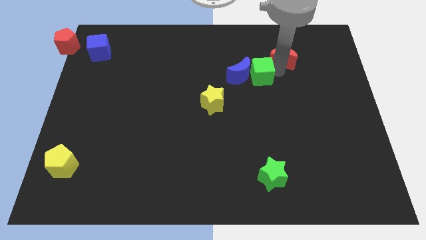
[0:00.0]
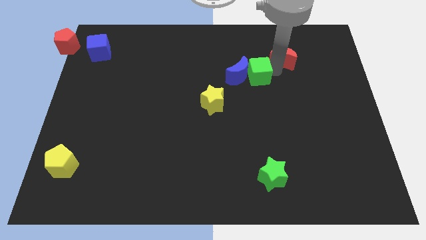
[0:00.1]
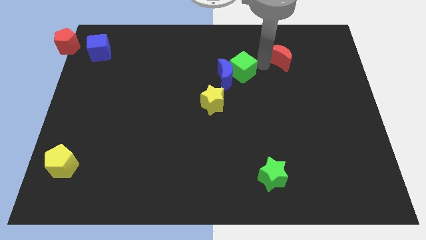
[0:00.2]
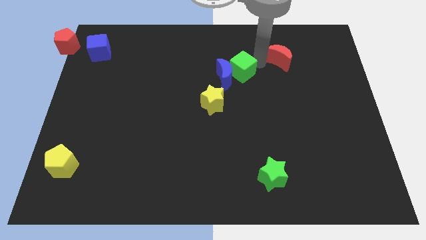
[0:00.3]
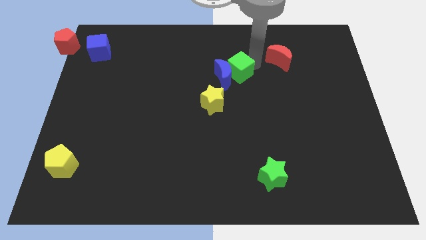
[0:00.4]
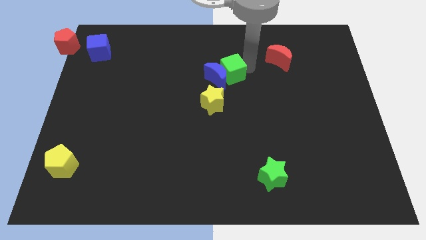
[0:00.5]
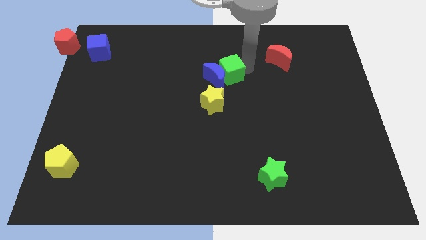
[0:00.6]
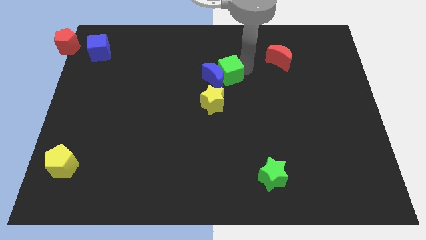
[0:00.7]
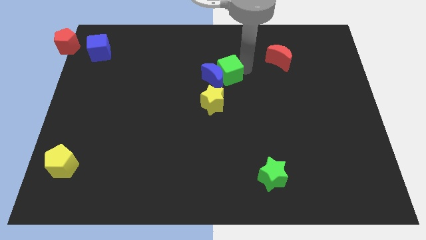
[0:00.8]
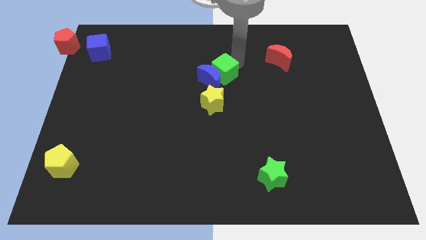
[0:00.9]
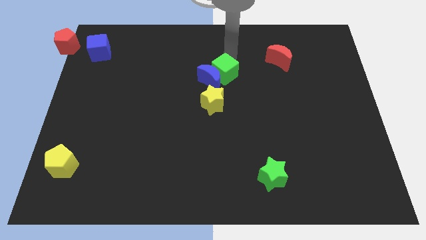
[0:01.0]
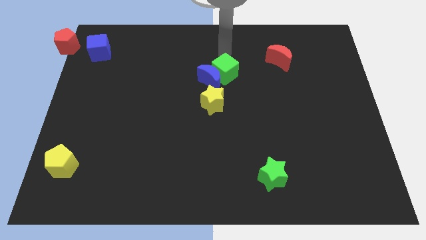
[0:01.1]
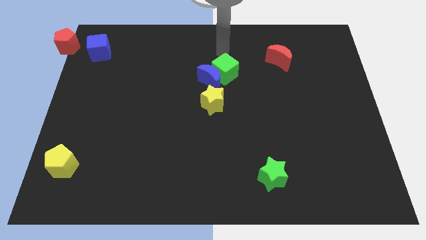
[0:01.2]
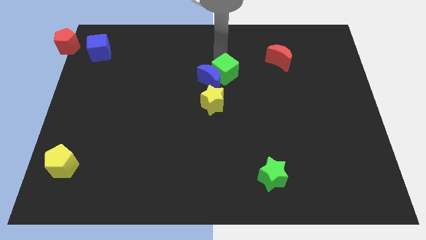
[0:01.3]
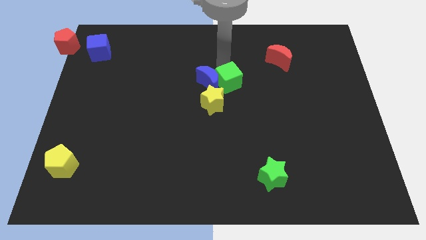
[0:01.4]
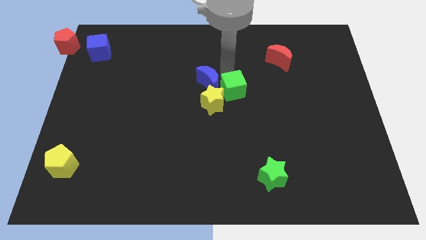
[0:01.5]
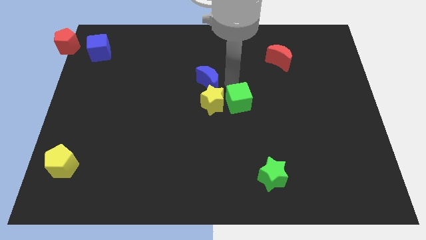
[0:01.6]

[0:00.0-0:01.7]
push green cube beside yellow star

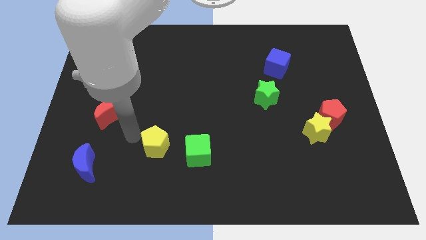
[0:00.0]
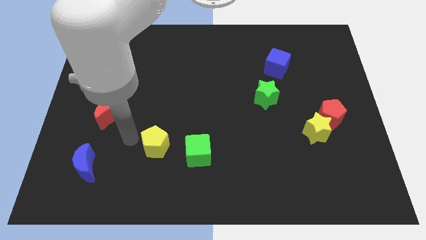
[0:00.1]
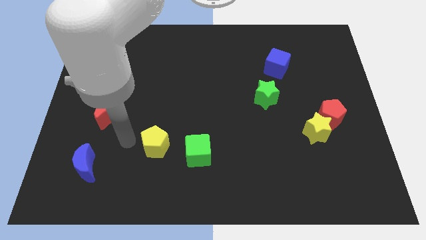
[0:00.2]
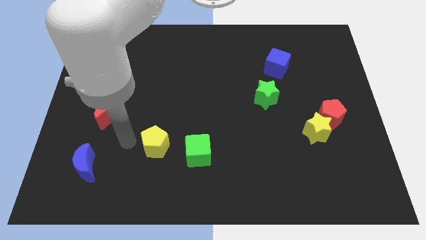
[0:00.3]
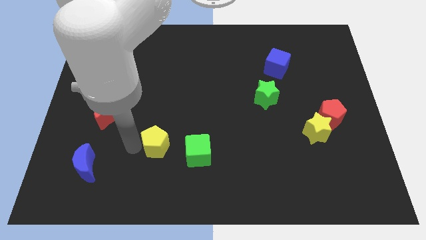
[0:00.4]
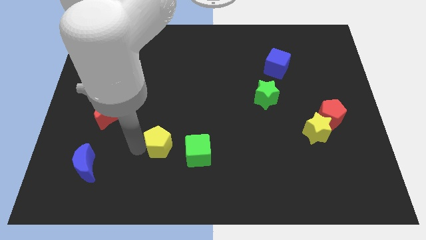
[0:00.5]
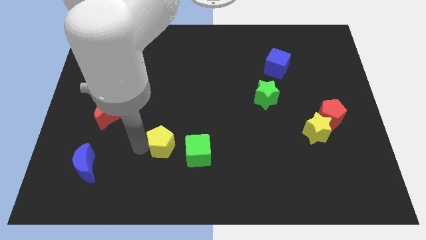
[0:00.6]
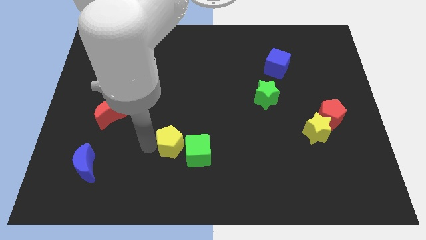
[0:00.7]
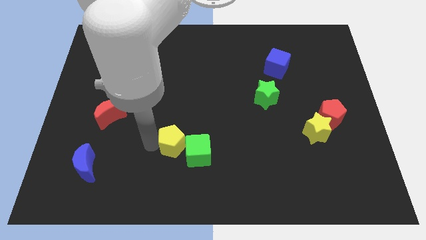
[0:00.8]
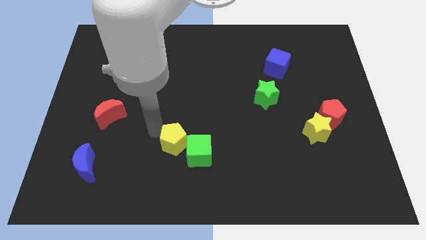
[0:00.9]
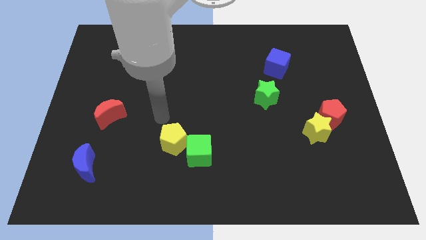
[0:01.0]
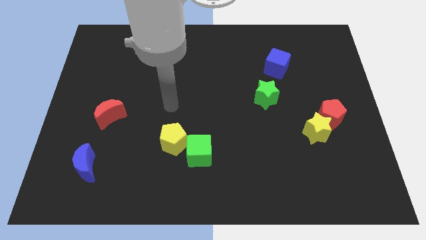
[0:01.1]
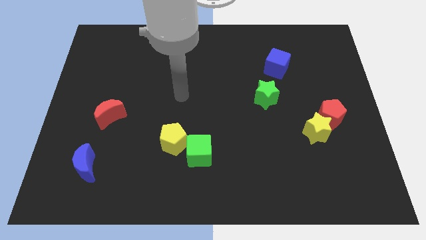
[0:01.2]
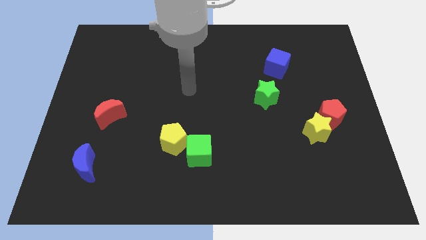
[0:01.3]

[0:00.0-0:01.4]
push the yellow pentagon into the green cube

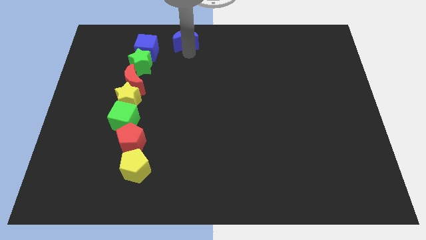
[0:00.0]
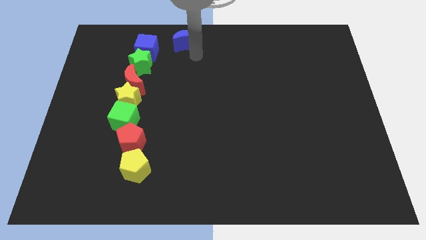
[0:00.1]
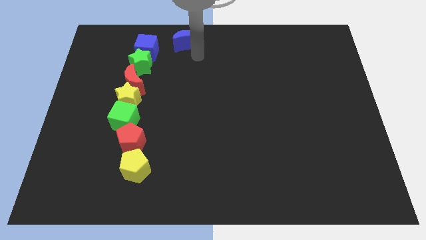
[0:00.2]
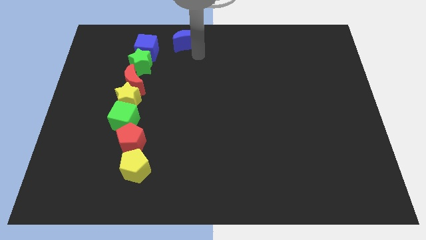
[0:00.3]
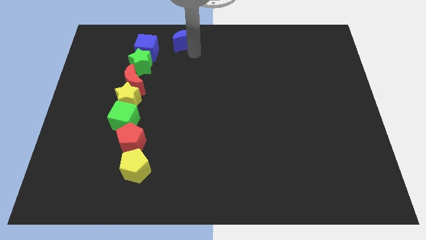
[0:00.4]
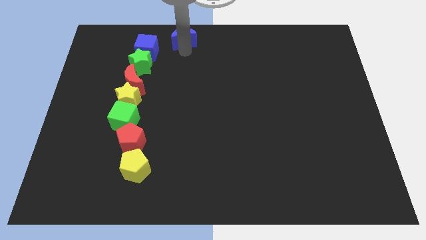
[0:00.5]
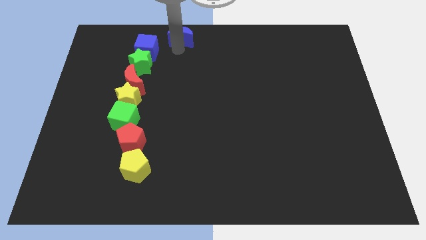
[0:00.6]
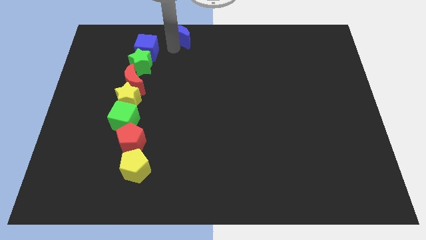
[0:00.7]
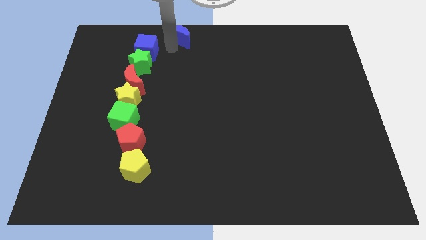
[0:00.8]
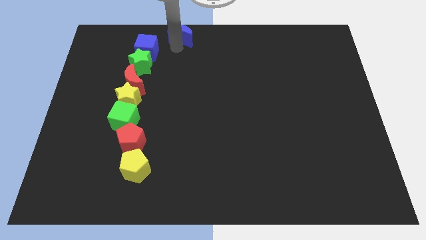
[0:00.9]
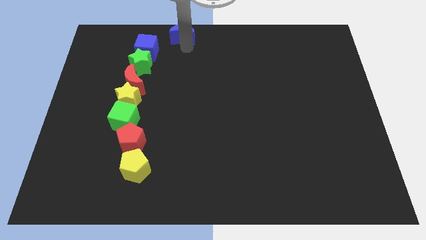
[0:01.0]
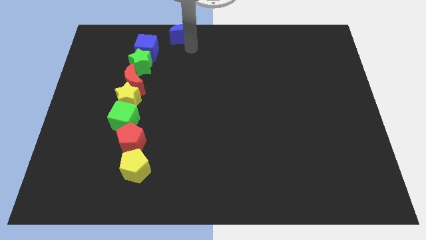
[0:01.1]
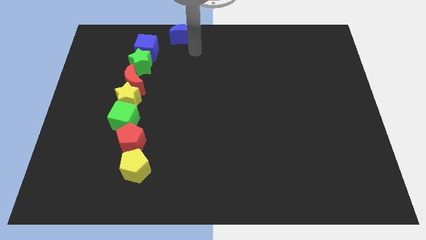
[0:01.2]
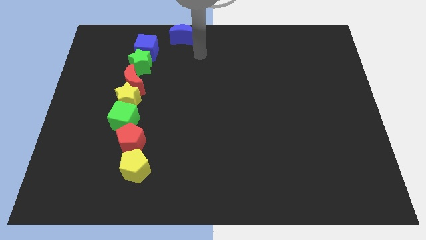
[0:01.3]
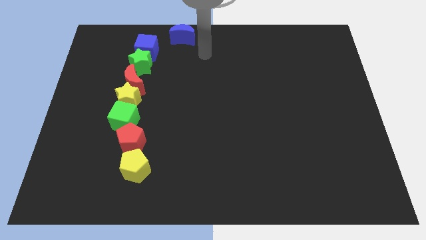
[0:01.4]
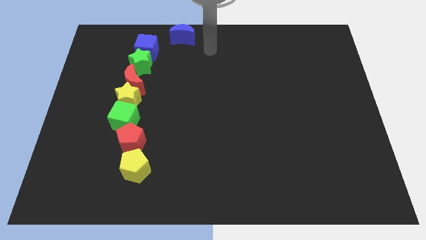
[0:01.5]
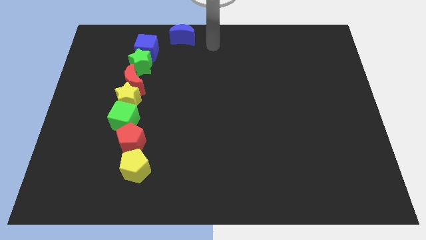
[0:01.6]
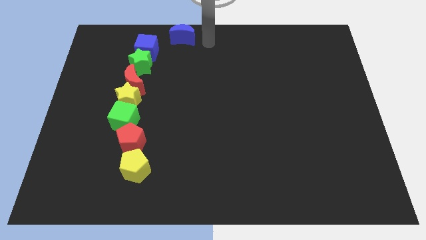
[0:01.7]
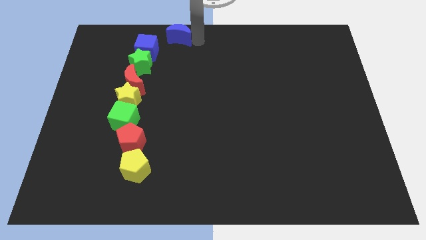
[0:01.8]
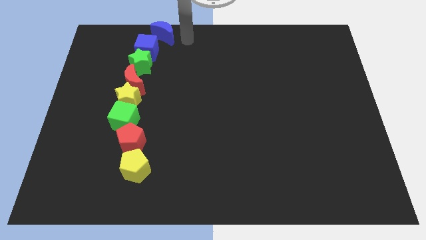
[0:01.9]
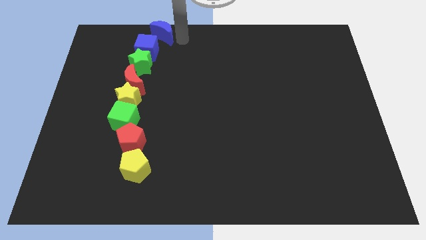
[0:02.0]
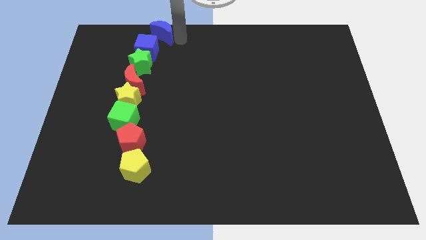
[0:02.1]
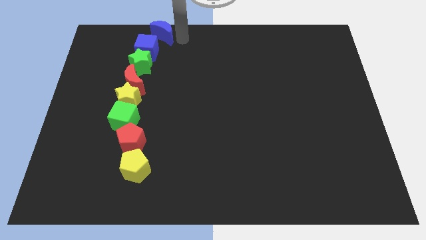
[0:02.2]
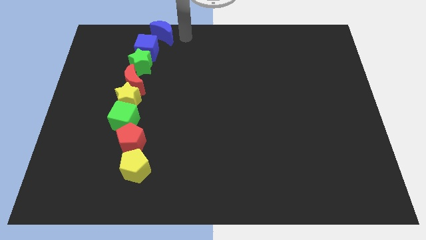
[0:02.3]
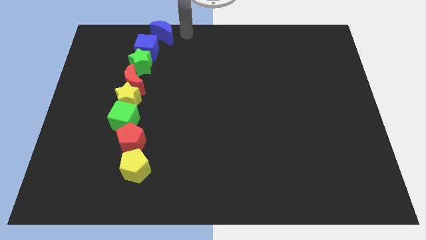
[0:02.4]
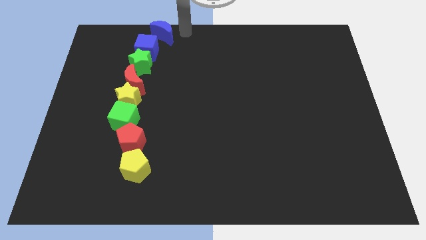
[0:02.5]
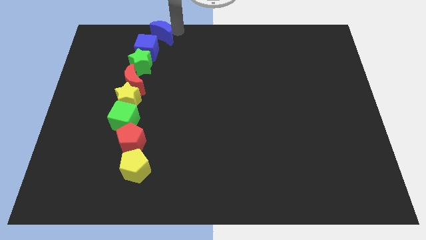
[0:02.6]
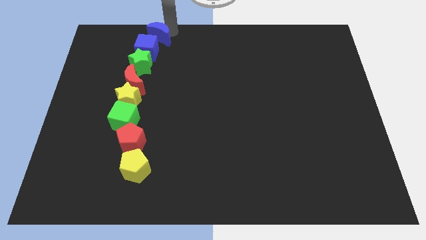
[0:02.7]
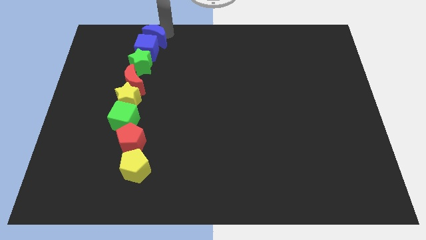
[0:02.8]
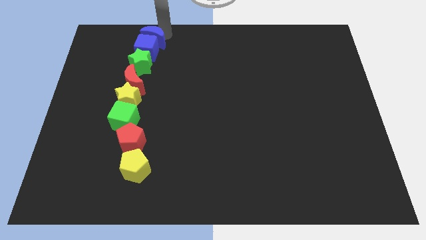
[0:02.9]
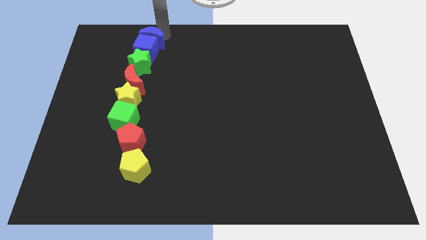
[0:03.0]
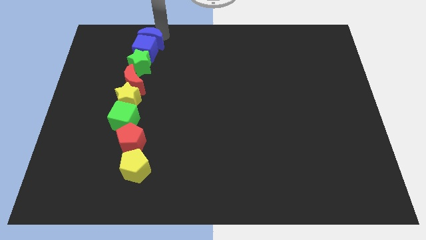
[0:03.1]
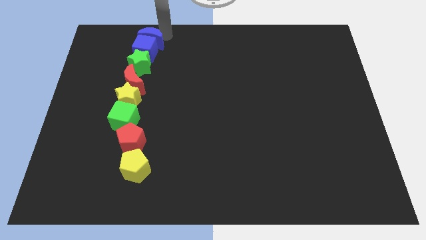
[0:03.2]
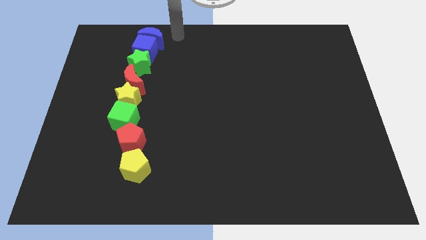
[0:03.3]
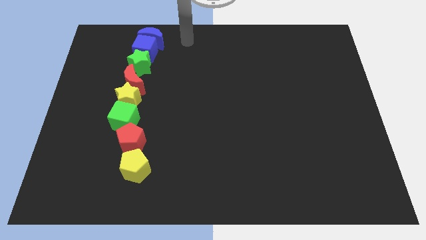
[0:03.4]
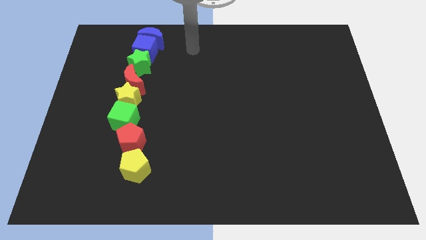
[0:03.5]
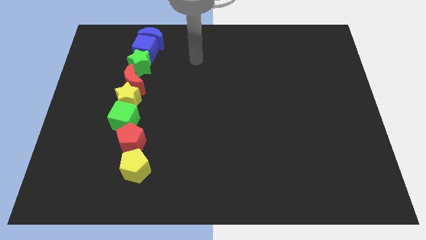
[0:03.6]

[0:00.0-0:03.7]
move the blue moon into the blue cube

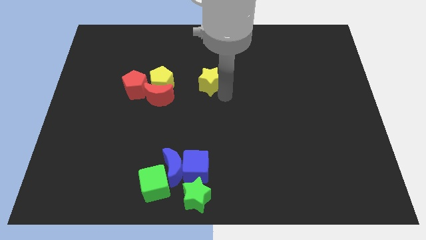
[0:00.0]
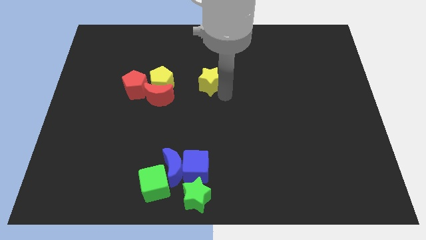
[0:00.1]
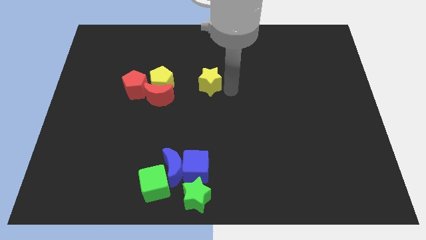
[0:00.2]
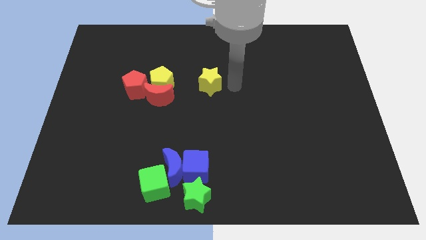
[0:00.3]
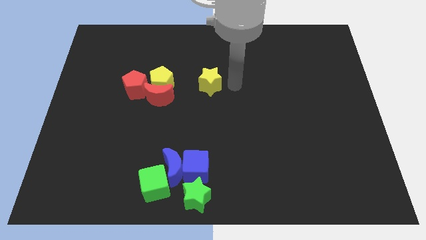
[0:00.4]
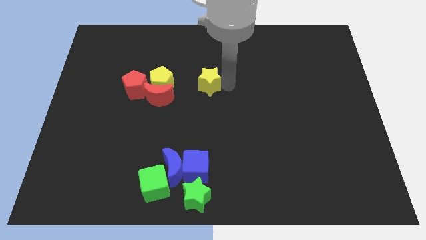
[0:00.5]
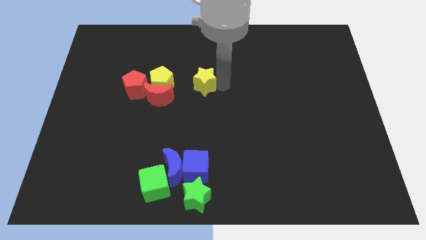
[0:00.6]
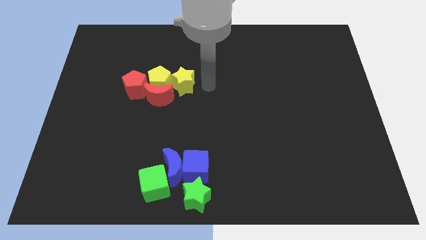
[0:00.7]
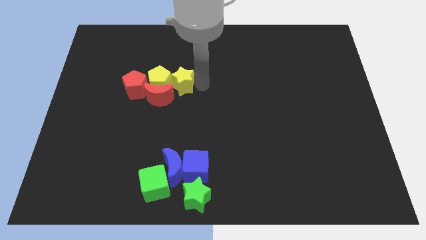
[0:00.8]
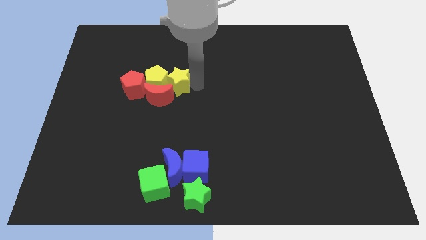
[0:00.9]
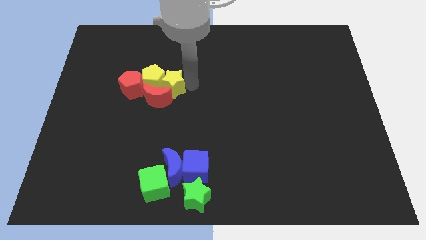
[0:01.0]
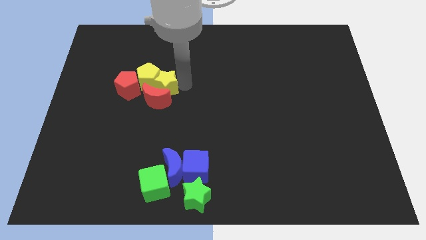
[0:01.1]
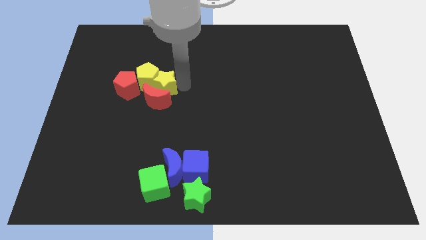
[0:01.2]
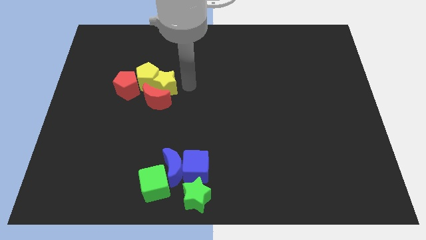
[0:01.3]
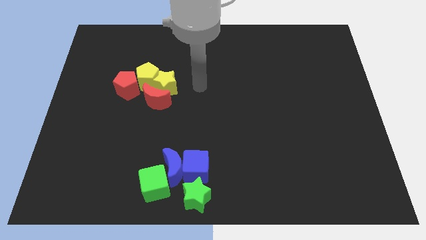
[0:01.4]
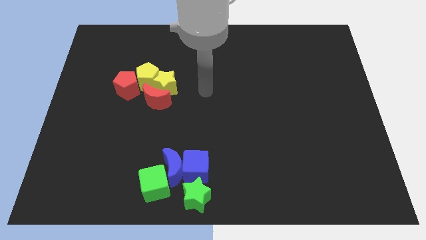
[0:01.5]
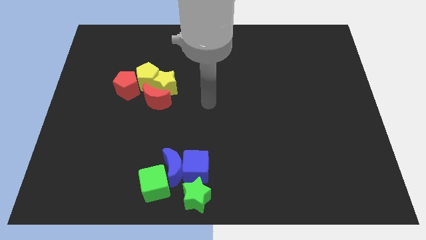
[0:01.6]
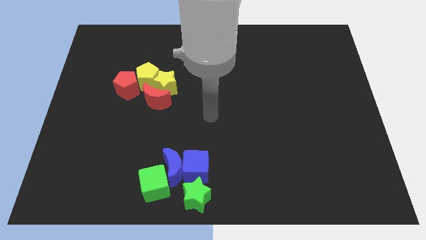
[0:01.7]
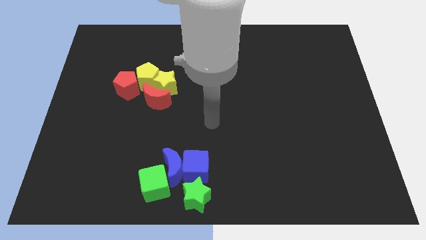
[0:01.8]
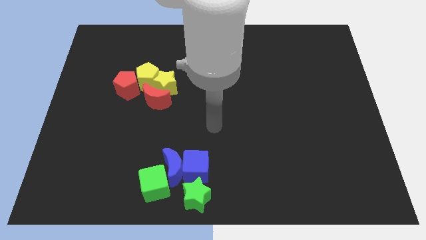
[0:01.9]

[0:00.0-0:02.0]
push the yellow star to the above the red crescent

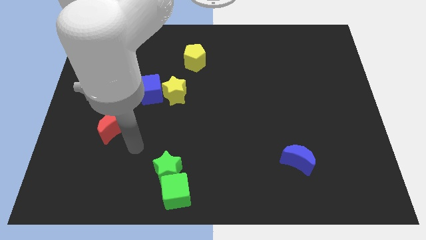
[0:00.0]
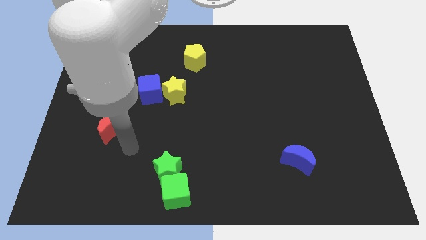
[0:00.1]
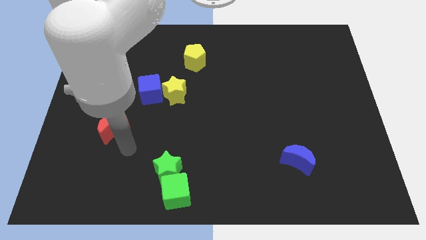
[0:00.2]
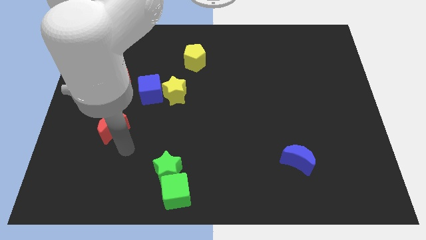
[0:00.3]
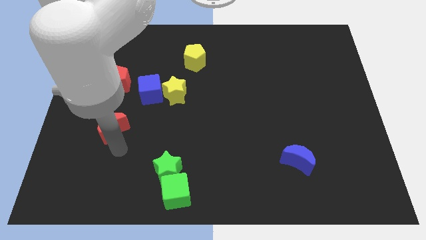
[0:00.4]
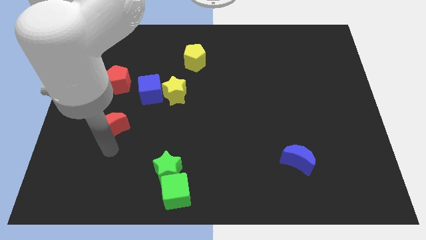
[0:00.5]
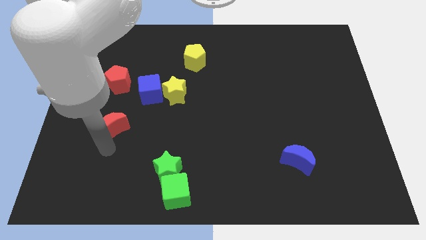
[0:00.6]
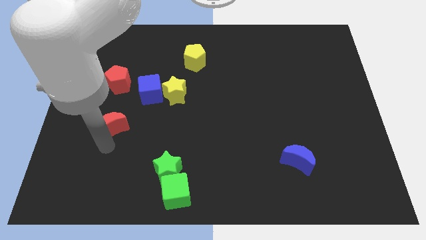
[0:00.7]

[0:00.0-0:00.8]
touch the bottom of red moon
